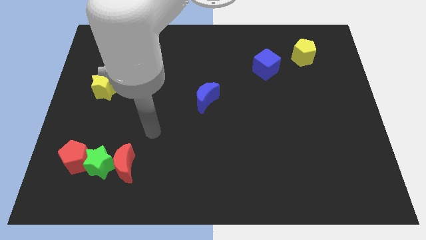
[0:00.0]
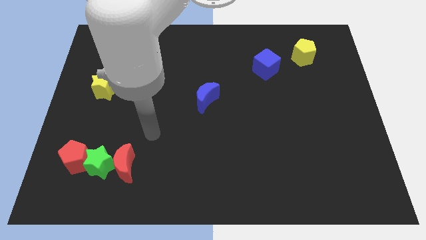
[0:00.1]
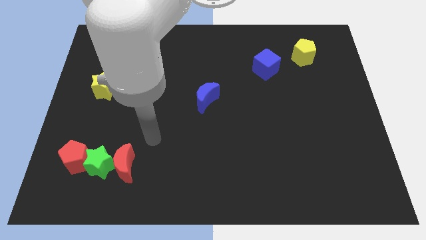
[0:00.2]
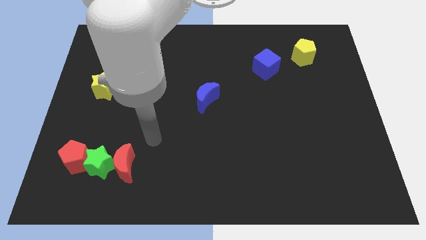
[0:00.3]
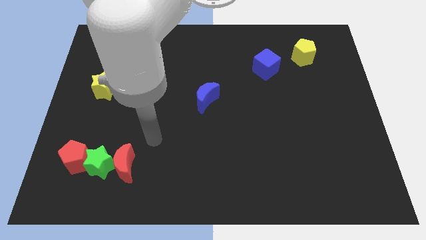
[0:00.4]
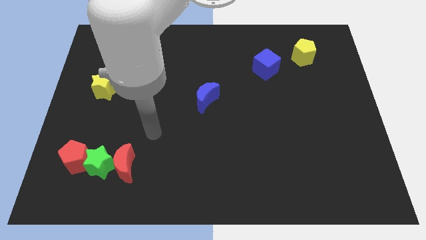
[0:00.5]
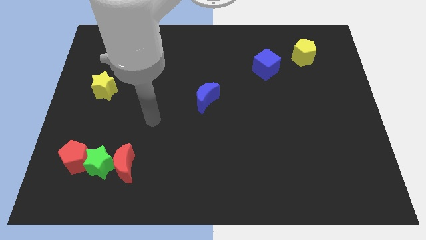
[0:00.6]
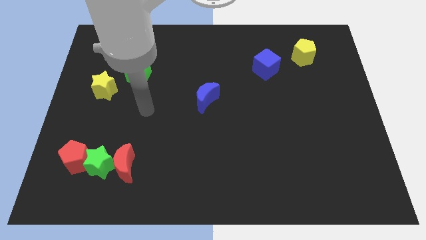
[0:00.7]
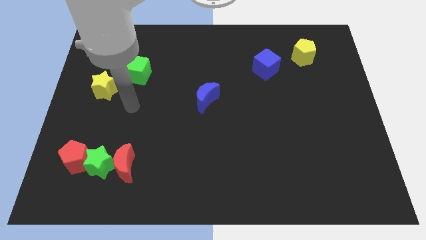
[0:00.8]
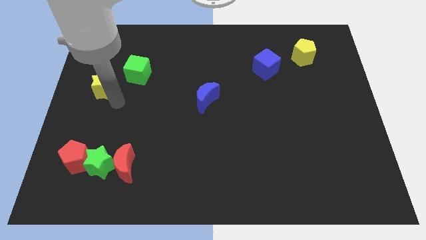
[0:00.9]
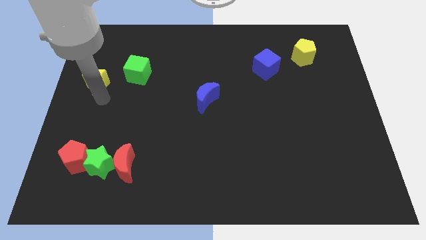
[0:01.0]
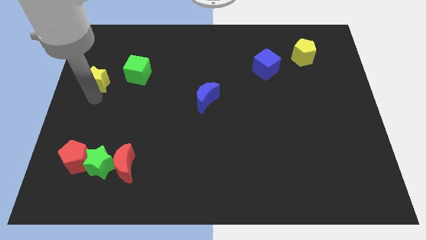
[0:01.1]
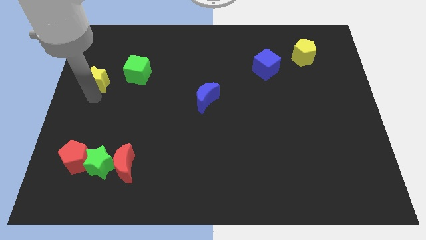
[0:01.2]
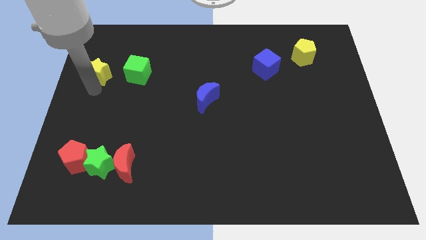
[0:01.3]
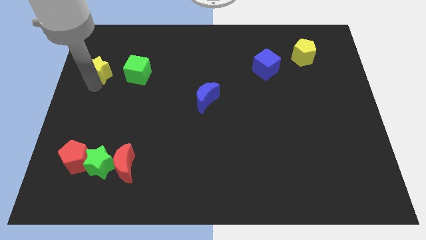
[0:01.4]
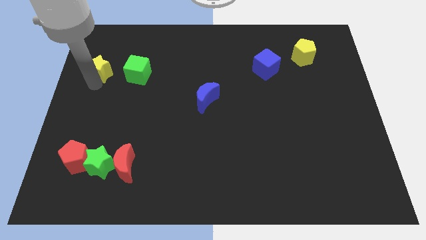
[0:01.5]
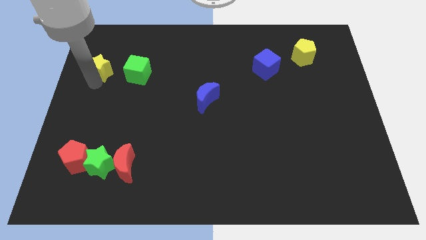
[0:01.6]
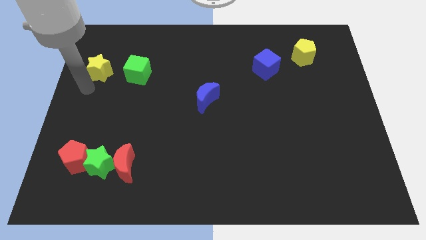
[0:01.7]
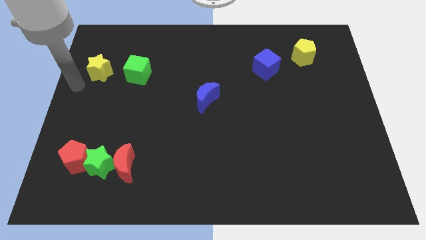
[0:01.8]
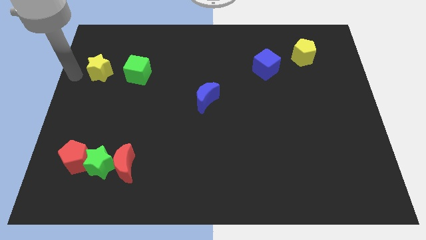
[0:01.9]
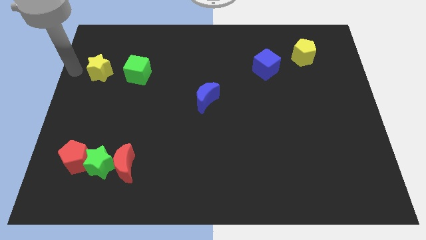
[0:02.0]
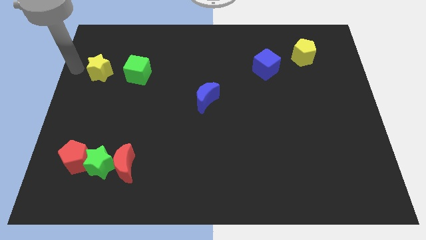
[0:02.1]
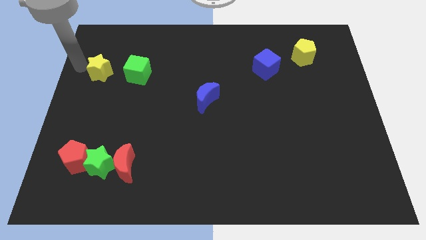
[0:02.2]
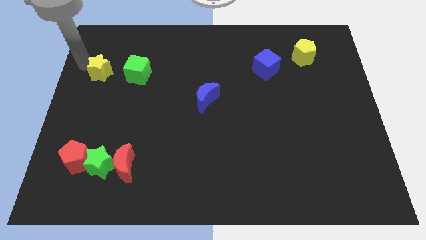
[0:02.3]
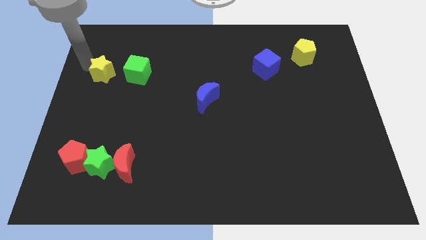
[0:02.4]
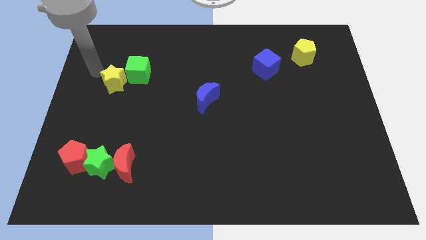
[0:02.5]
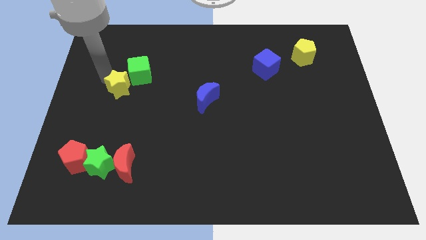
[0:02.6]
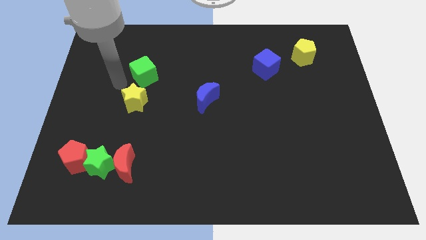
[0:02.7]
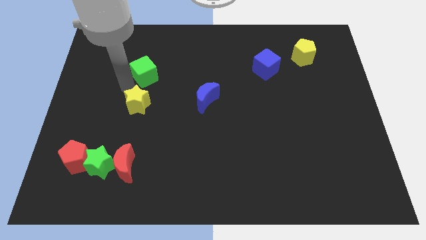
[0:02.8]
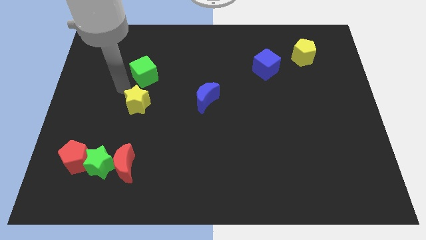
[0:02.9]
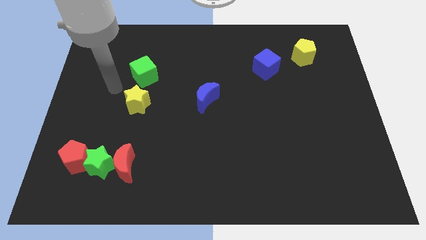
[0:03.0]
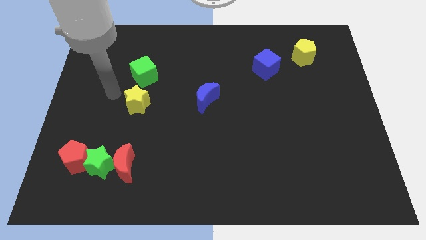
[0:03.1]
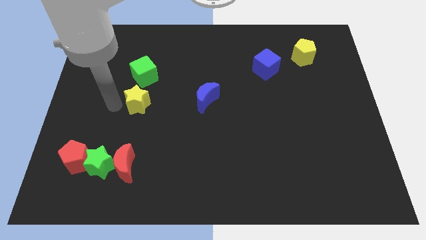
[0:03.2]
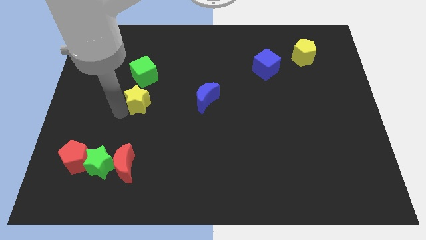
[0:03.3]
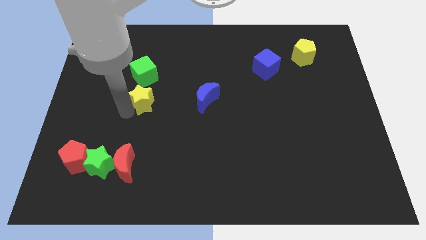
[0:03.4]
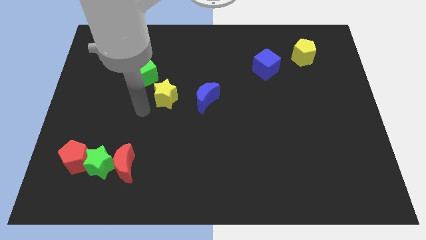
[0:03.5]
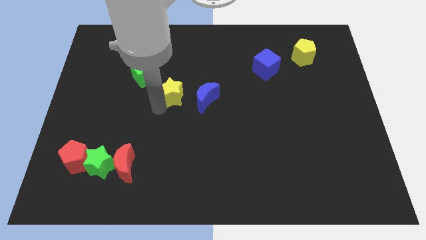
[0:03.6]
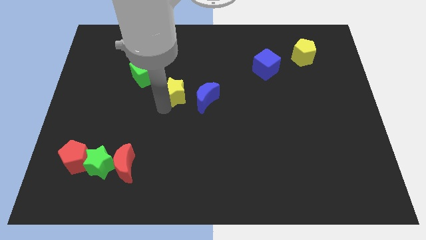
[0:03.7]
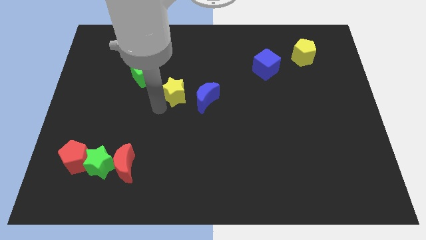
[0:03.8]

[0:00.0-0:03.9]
move the yellow star to the middle of green cube and blue crescent

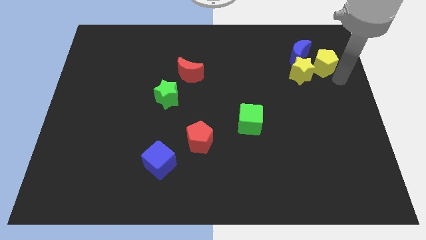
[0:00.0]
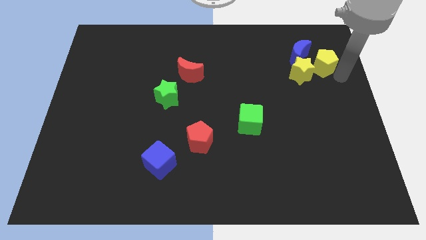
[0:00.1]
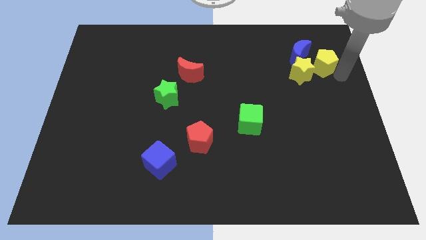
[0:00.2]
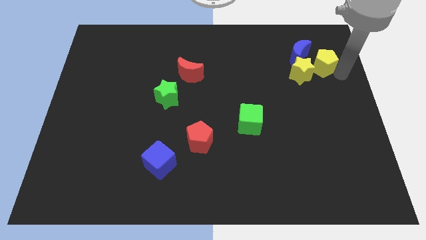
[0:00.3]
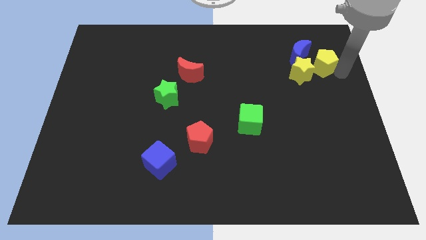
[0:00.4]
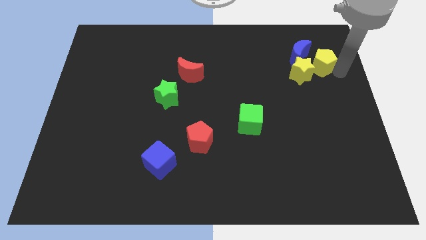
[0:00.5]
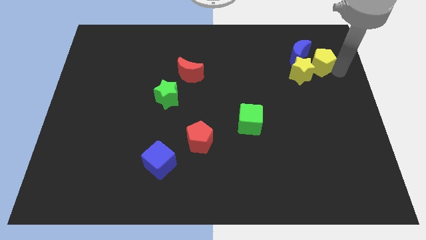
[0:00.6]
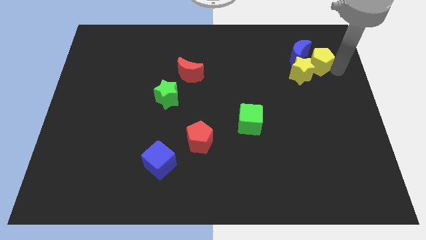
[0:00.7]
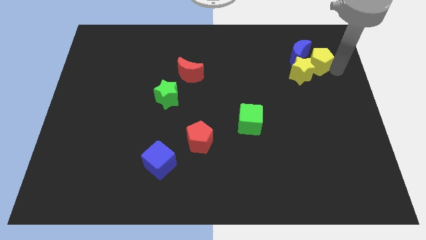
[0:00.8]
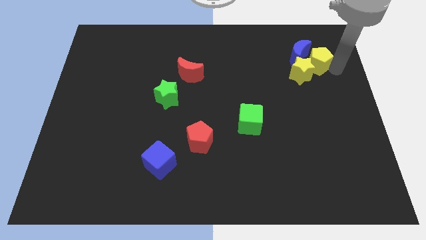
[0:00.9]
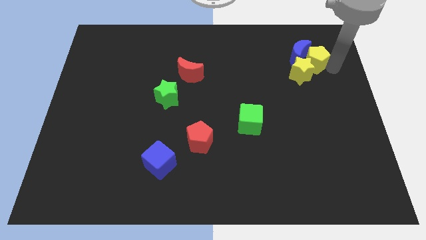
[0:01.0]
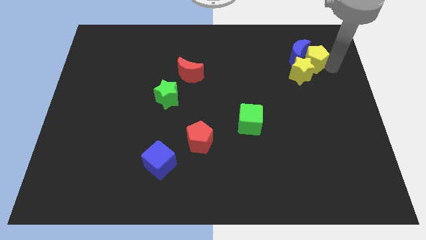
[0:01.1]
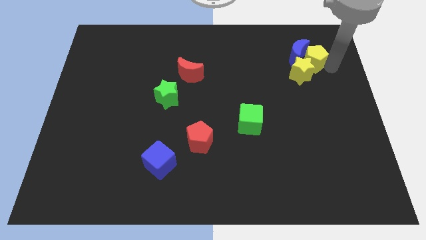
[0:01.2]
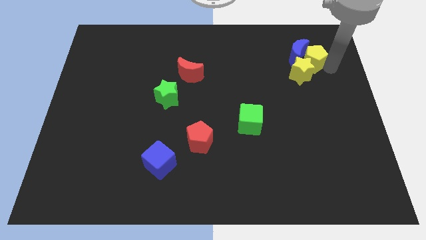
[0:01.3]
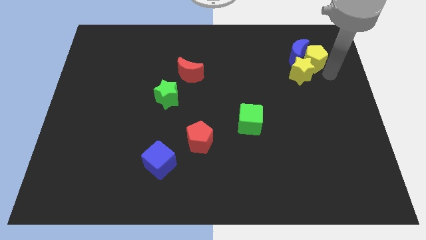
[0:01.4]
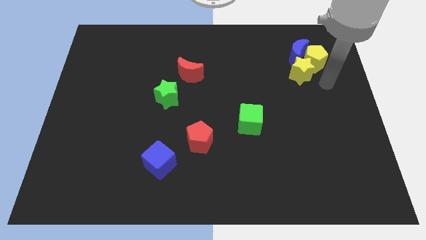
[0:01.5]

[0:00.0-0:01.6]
slightly push the yellow pentagon into the blue crescent

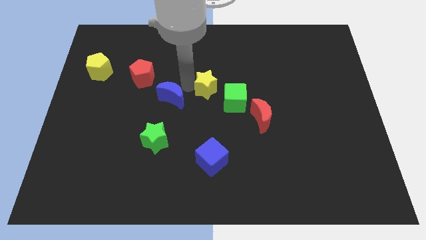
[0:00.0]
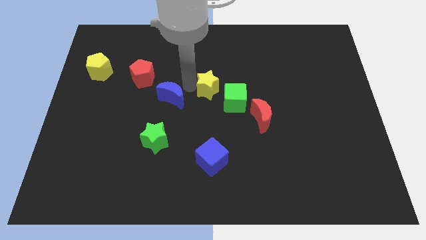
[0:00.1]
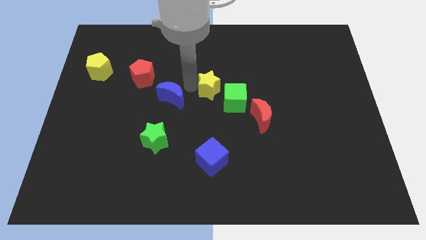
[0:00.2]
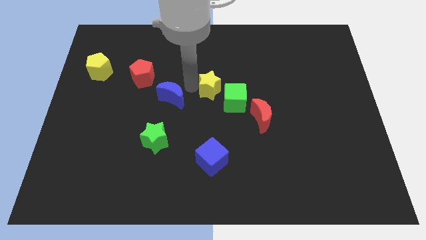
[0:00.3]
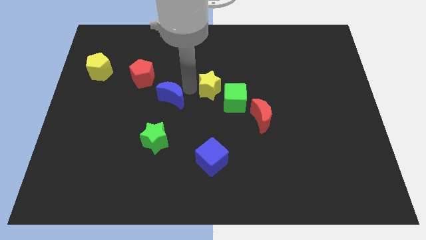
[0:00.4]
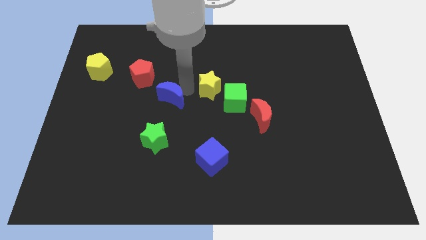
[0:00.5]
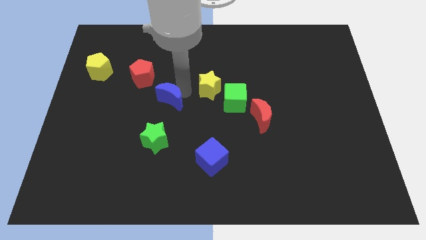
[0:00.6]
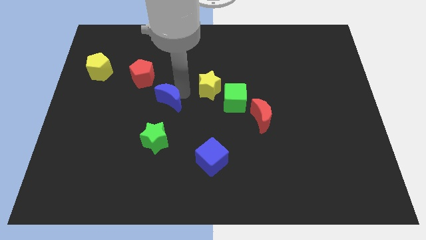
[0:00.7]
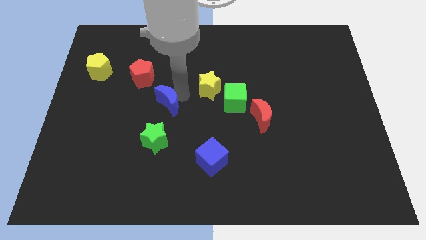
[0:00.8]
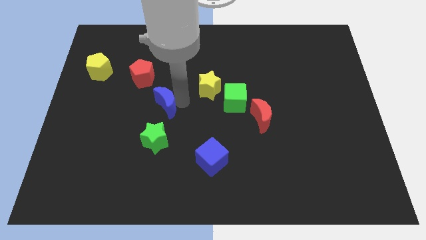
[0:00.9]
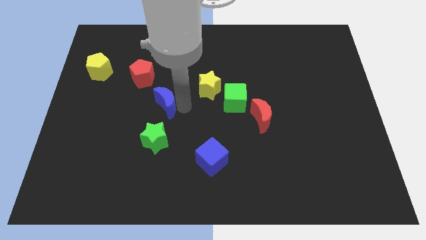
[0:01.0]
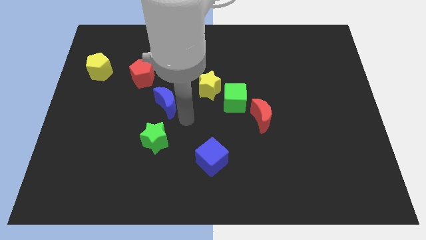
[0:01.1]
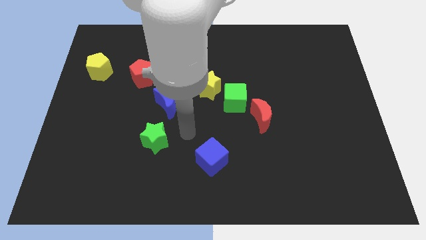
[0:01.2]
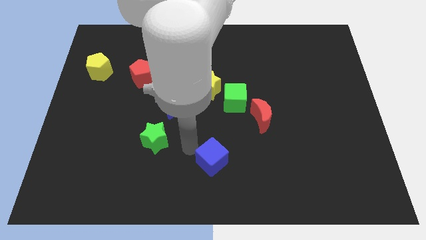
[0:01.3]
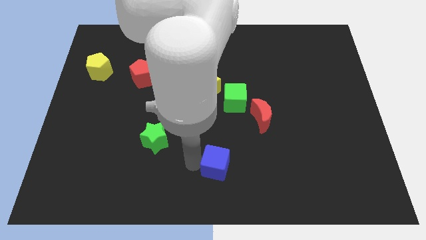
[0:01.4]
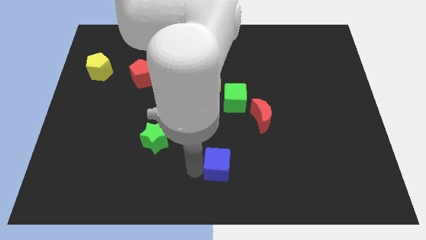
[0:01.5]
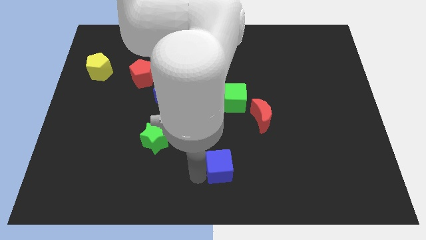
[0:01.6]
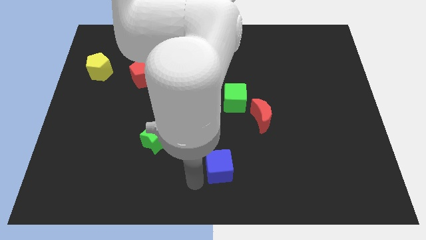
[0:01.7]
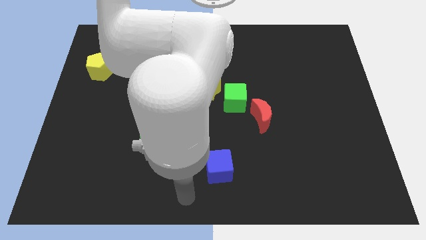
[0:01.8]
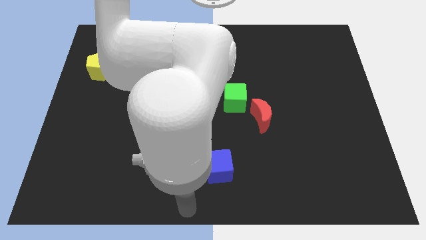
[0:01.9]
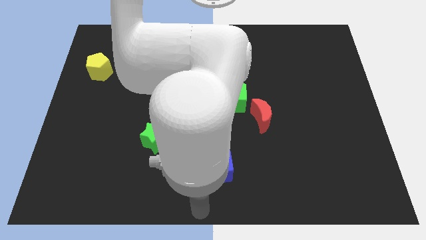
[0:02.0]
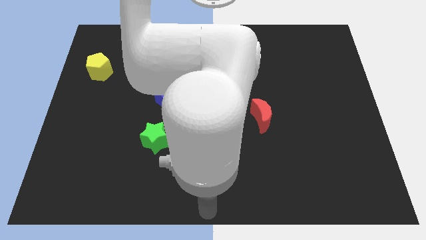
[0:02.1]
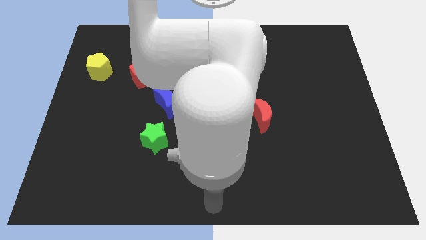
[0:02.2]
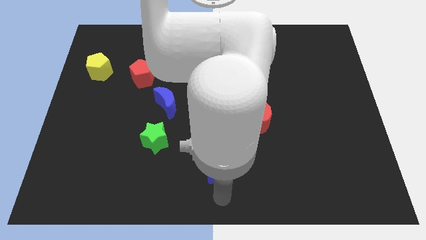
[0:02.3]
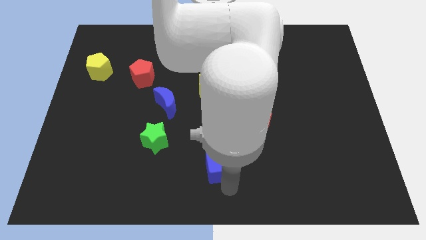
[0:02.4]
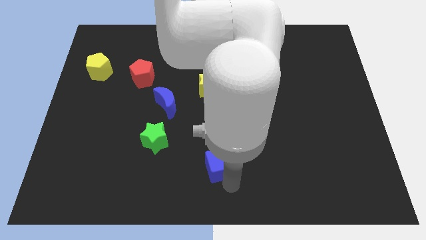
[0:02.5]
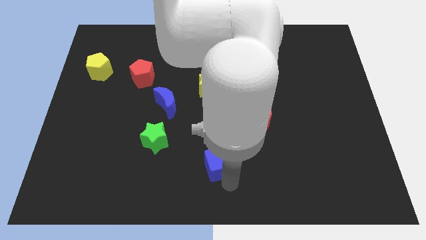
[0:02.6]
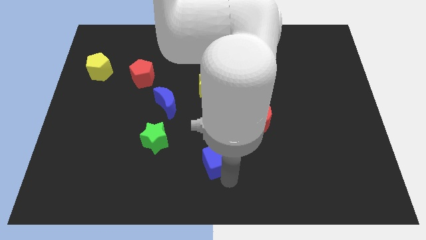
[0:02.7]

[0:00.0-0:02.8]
place your arm below blue cube

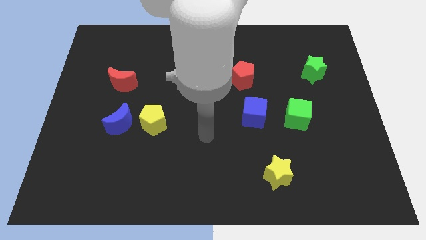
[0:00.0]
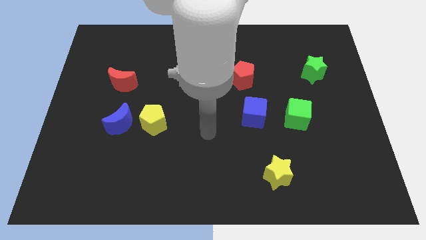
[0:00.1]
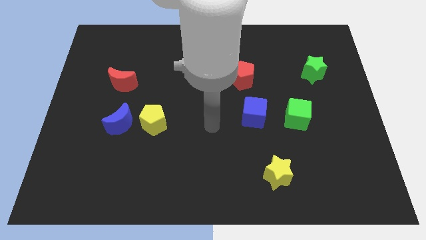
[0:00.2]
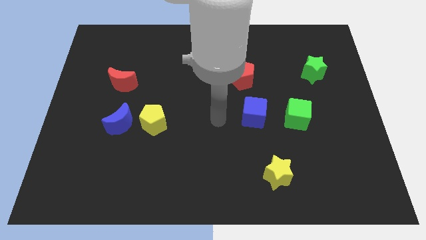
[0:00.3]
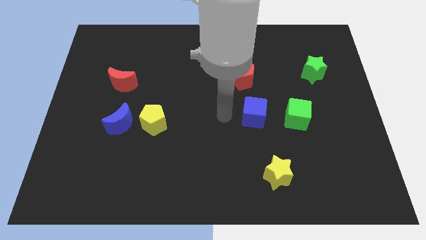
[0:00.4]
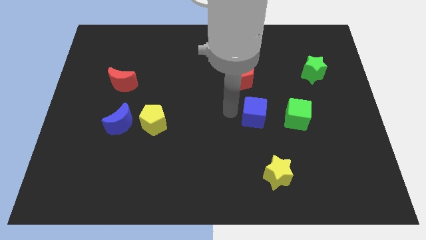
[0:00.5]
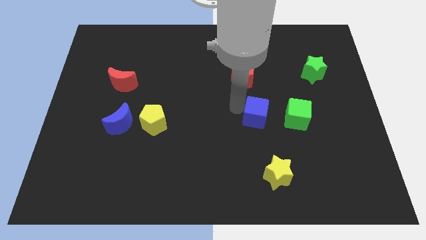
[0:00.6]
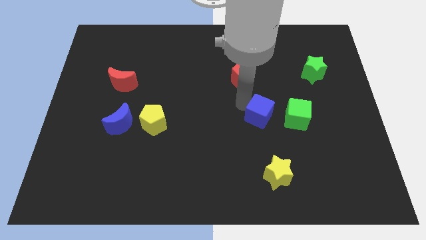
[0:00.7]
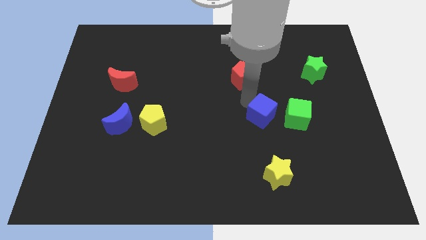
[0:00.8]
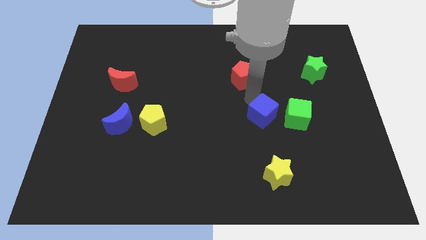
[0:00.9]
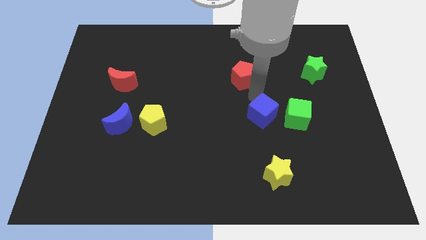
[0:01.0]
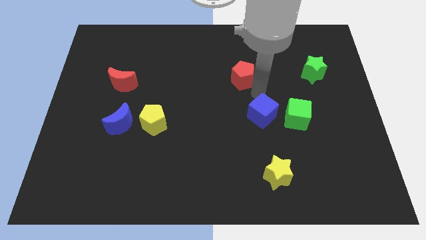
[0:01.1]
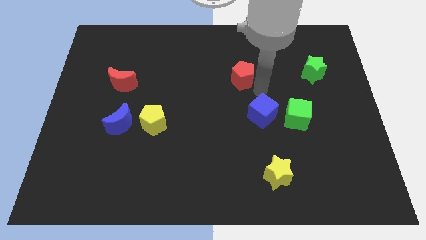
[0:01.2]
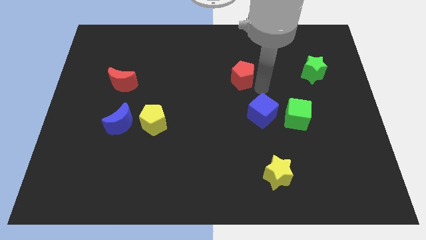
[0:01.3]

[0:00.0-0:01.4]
touch the blue cube with your arm
